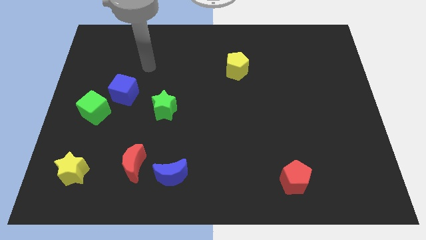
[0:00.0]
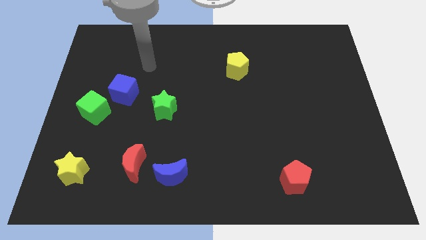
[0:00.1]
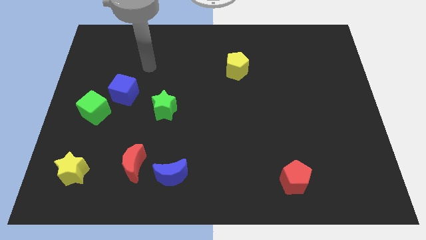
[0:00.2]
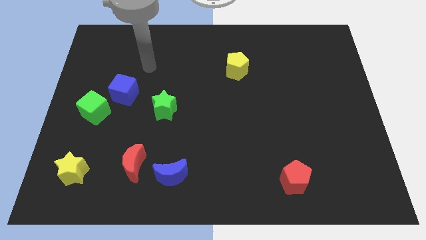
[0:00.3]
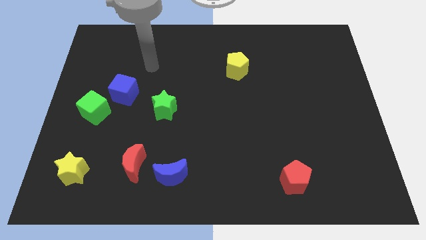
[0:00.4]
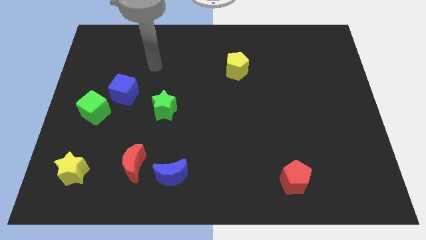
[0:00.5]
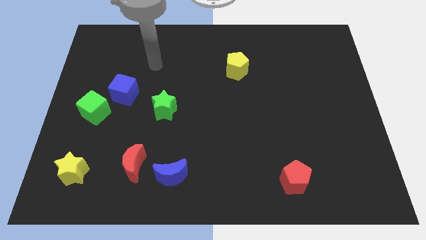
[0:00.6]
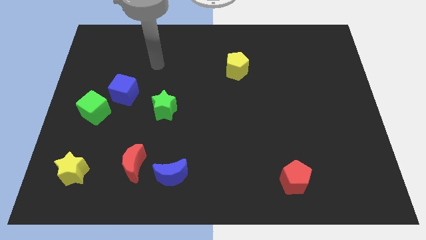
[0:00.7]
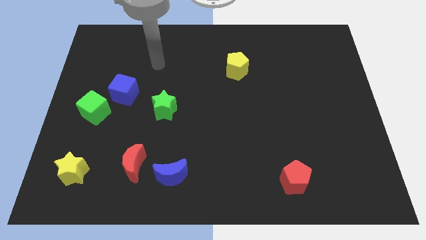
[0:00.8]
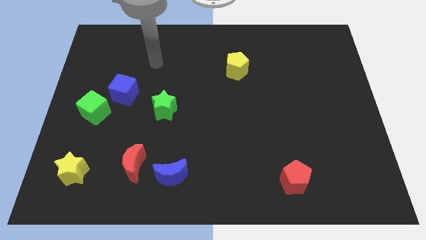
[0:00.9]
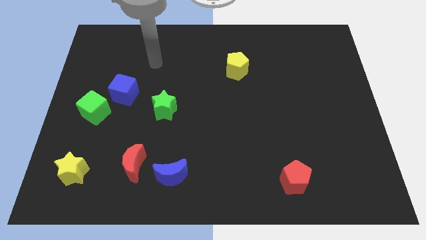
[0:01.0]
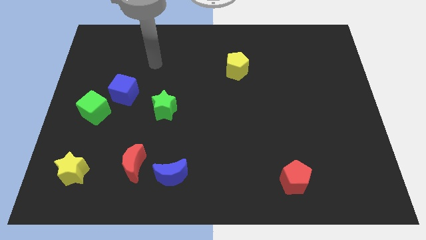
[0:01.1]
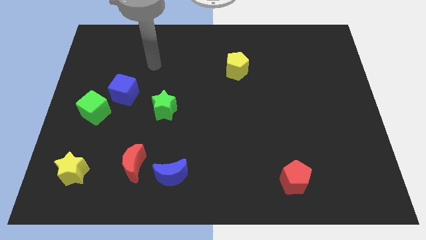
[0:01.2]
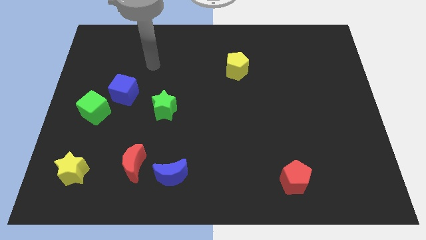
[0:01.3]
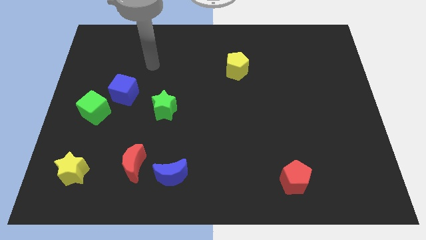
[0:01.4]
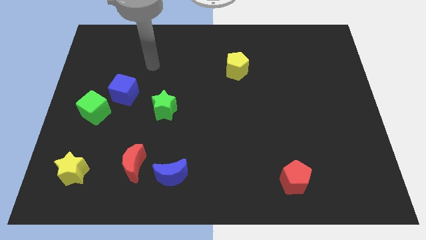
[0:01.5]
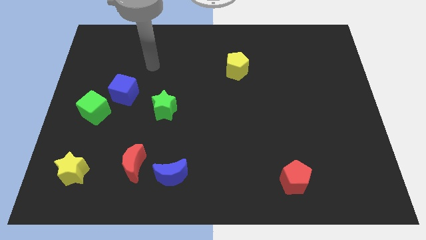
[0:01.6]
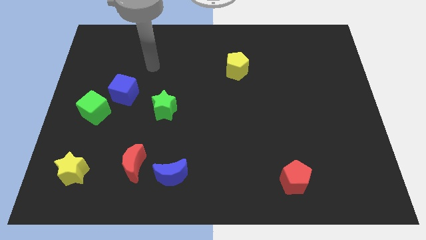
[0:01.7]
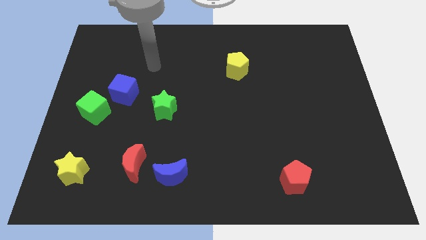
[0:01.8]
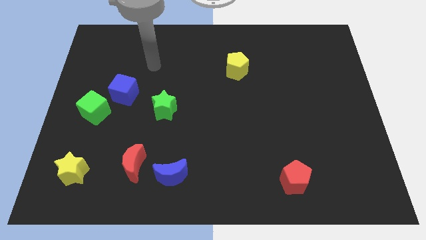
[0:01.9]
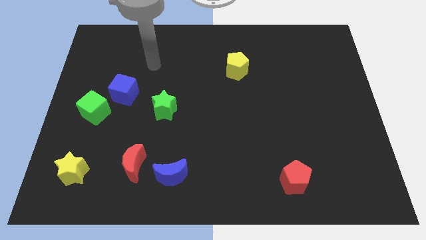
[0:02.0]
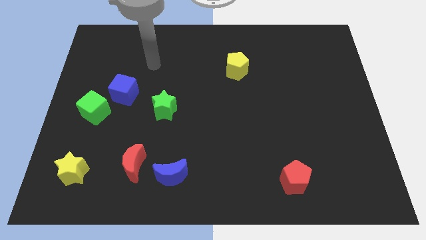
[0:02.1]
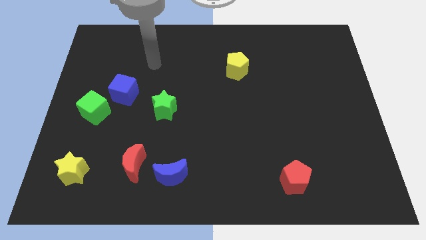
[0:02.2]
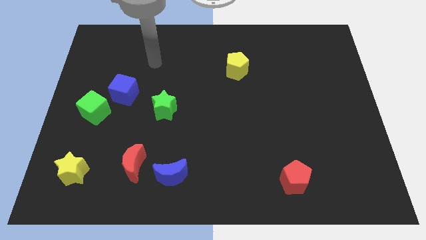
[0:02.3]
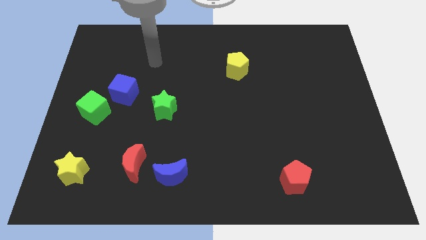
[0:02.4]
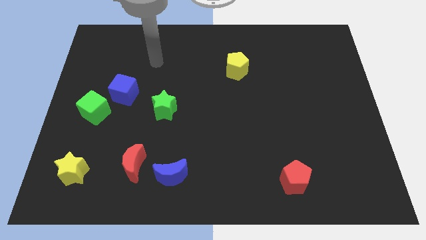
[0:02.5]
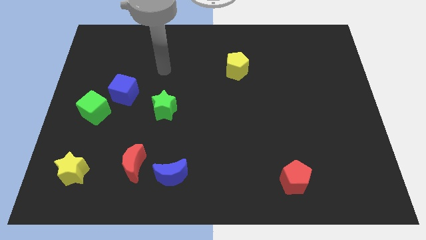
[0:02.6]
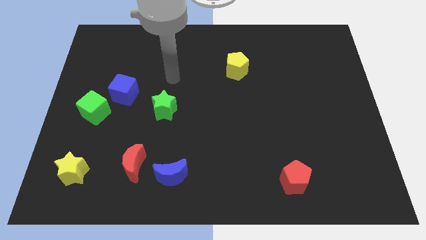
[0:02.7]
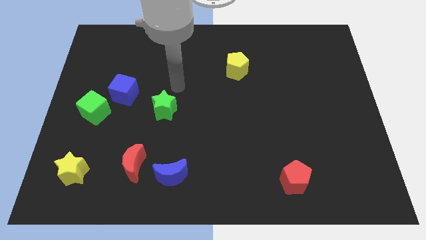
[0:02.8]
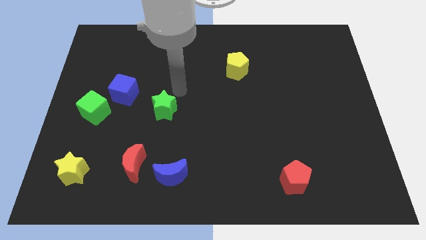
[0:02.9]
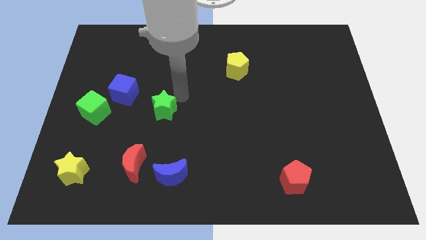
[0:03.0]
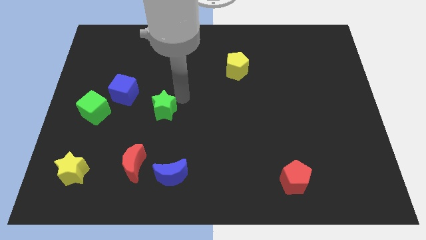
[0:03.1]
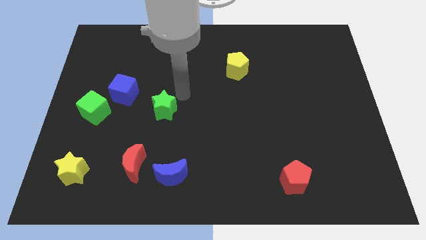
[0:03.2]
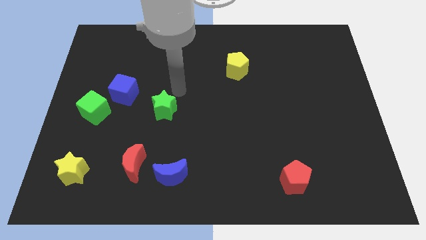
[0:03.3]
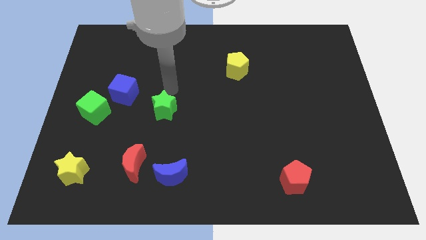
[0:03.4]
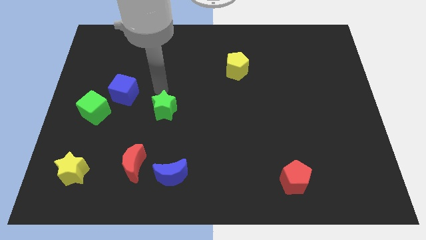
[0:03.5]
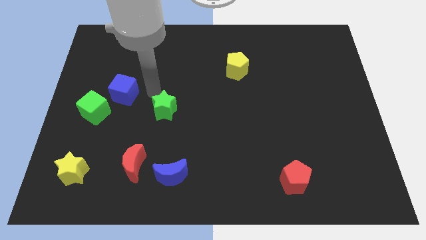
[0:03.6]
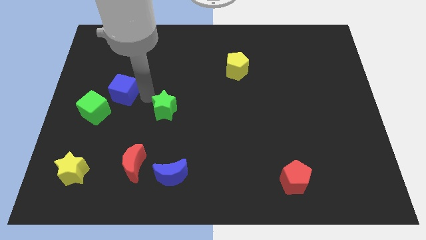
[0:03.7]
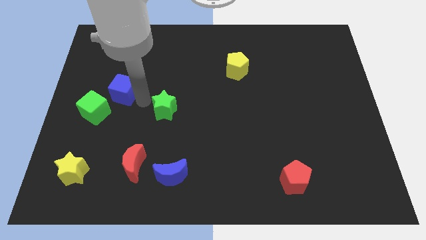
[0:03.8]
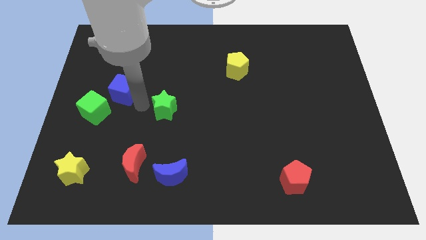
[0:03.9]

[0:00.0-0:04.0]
place your arm in between the blue cube and the green star

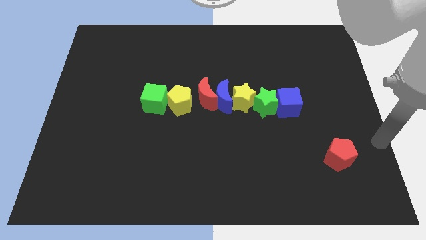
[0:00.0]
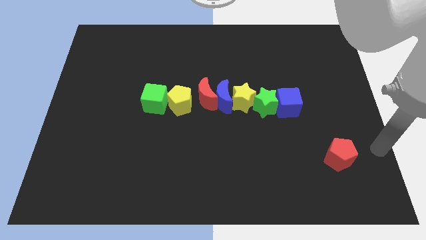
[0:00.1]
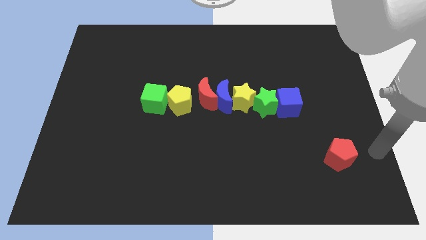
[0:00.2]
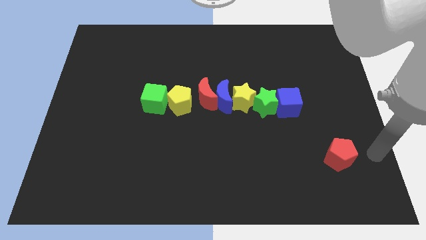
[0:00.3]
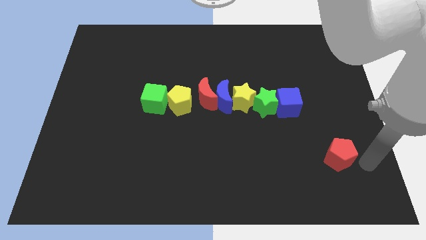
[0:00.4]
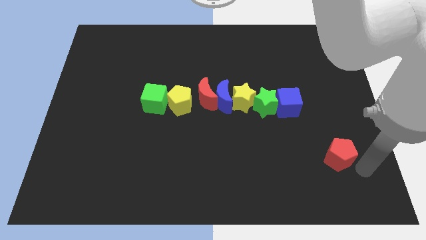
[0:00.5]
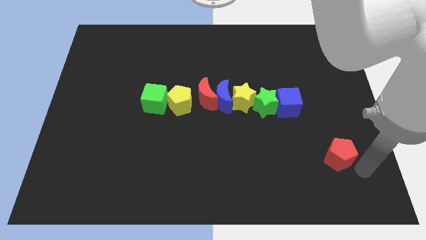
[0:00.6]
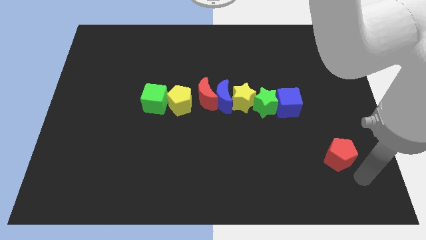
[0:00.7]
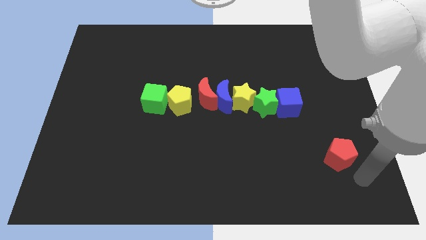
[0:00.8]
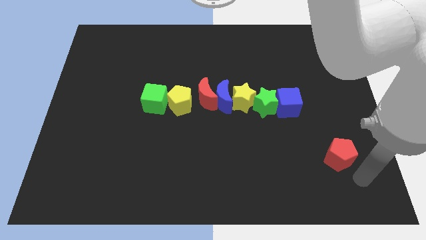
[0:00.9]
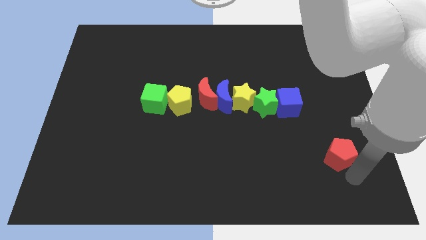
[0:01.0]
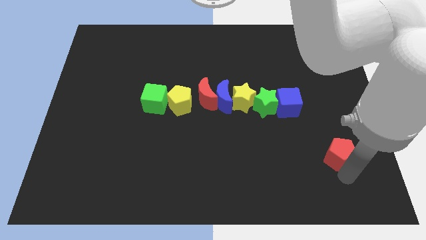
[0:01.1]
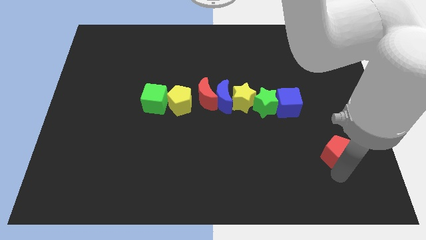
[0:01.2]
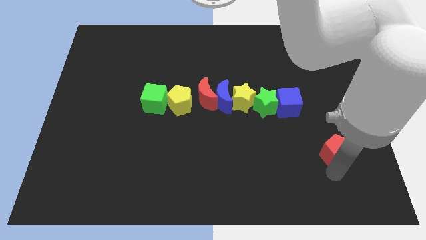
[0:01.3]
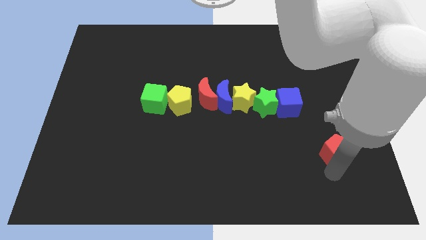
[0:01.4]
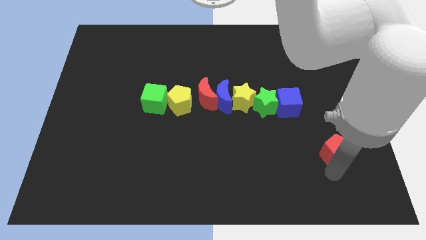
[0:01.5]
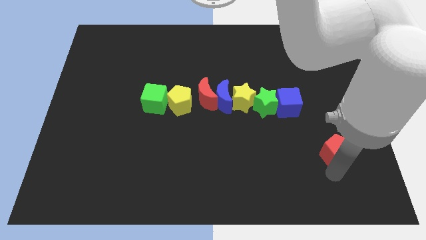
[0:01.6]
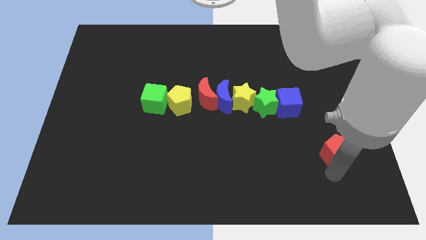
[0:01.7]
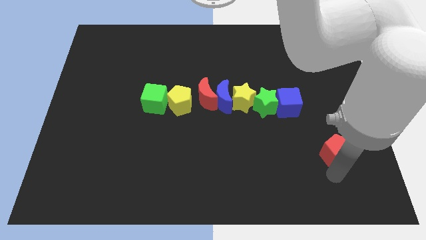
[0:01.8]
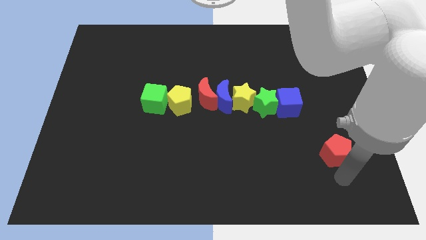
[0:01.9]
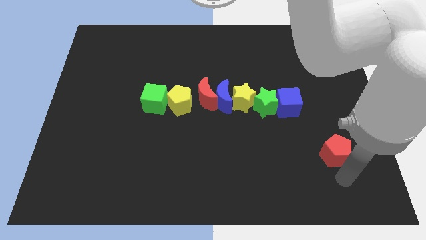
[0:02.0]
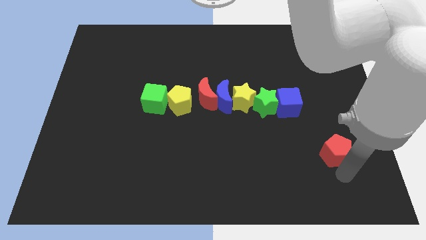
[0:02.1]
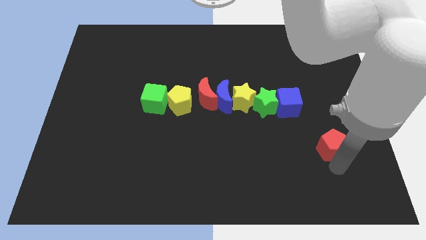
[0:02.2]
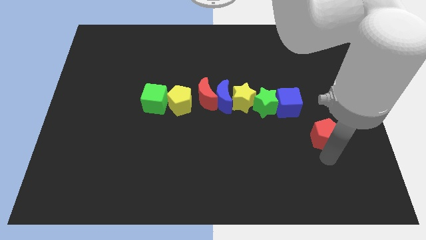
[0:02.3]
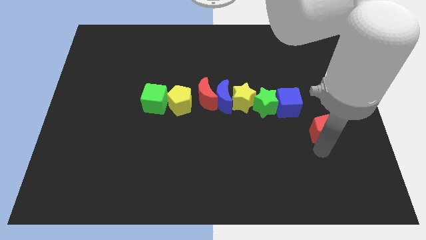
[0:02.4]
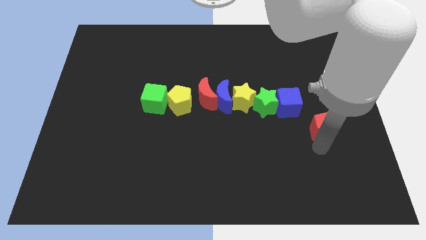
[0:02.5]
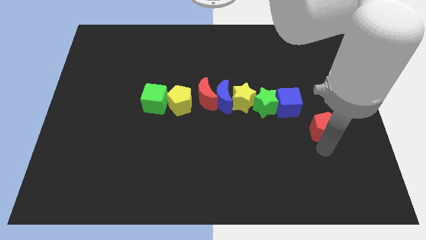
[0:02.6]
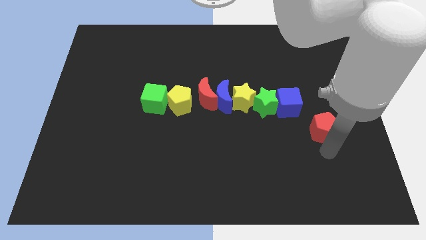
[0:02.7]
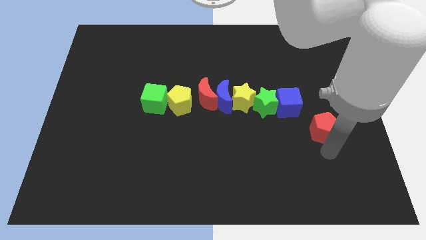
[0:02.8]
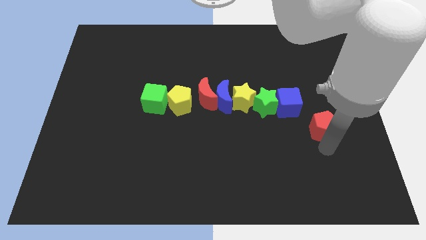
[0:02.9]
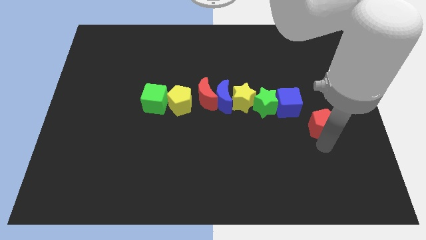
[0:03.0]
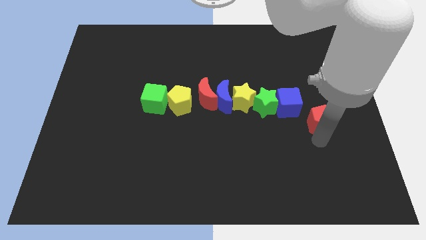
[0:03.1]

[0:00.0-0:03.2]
move red pentagon up to the bottom right of blue cube

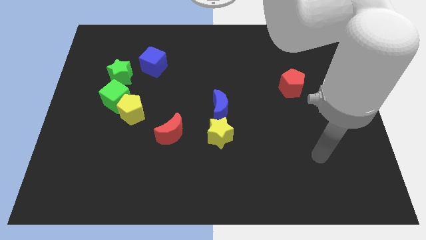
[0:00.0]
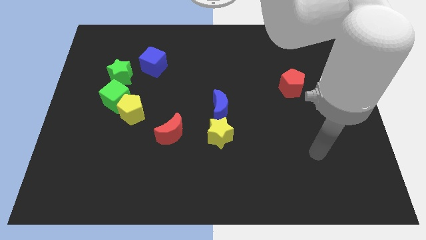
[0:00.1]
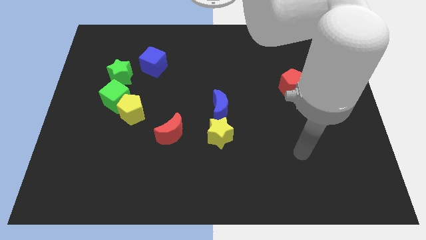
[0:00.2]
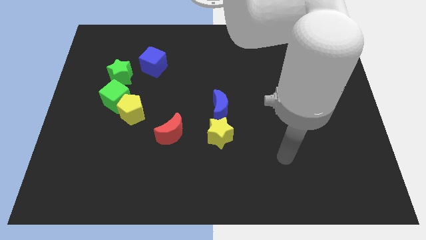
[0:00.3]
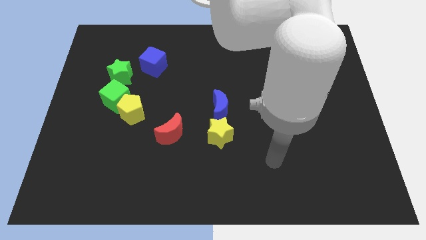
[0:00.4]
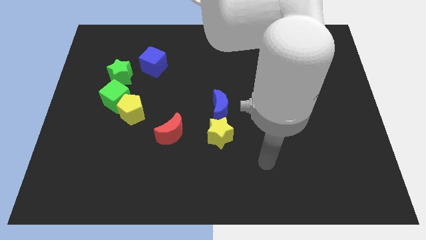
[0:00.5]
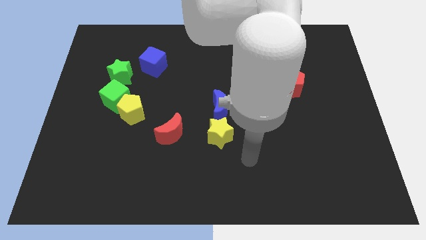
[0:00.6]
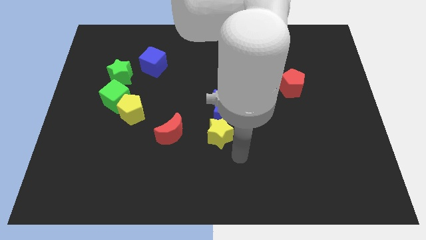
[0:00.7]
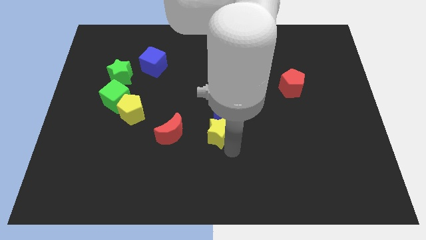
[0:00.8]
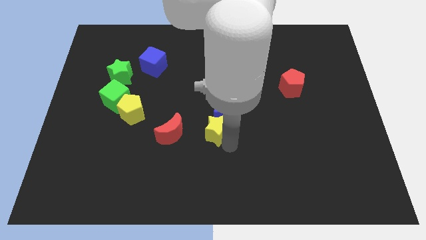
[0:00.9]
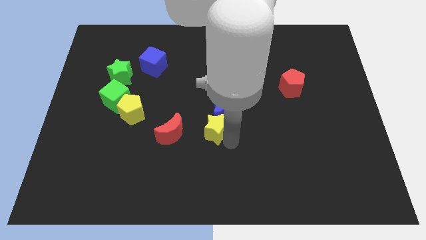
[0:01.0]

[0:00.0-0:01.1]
tap the bottom edge of yellow star

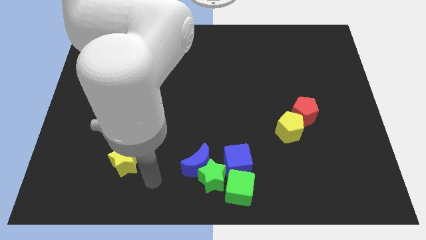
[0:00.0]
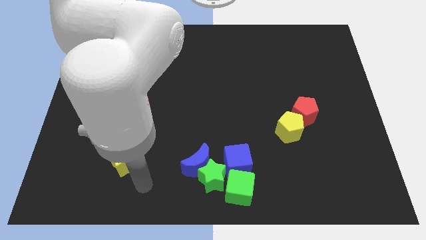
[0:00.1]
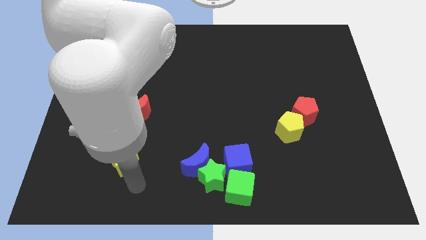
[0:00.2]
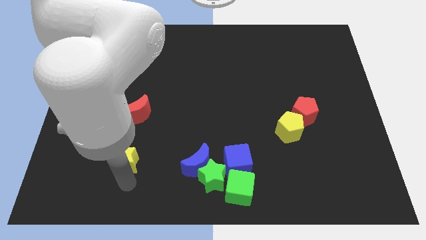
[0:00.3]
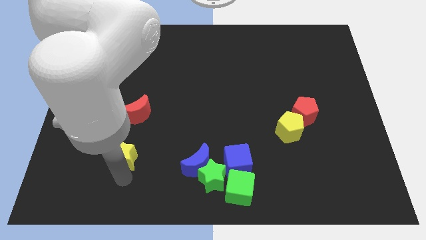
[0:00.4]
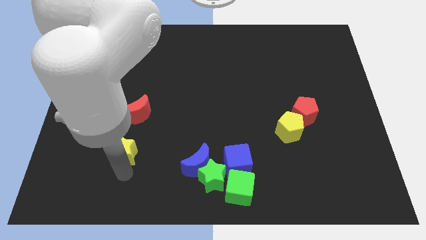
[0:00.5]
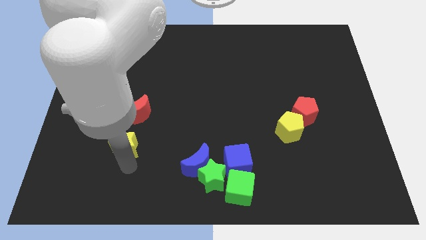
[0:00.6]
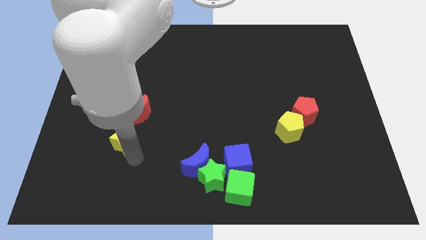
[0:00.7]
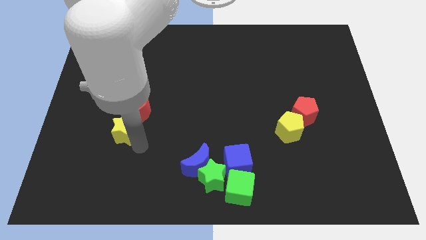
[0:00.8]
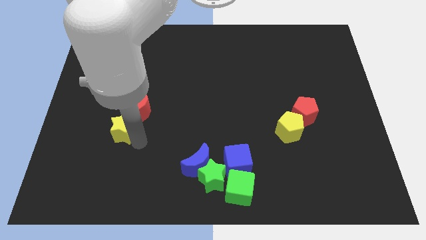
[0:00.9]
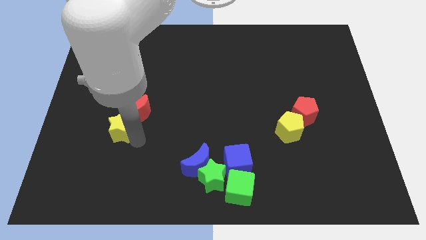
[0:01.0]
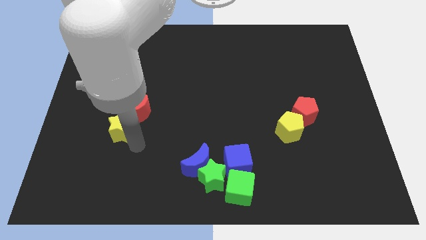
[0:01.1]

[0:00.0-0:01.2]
move the yellow star below the red crescent
